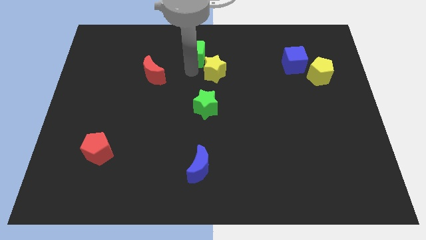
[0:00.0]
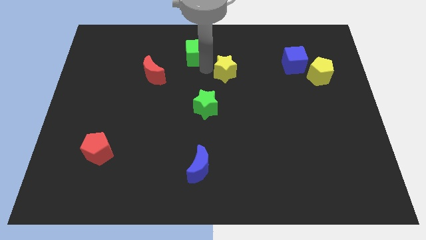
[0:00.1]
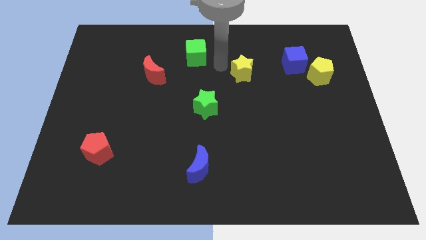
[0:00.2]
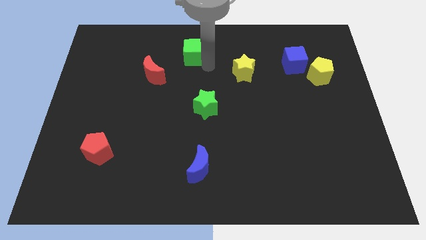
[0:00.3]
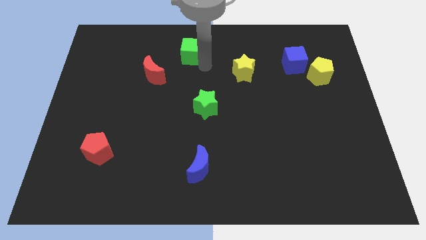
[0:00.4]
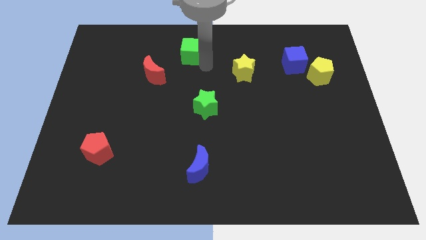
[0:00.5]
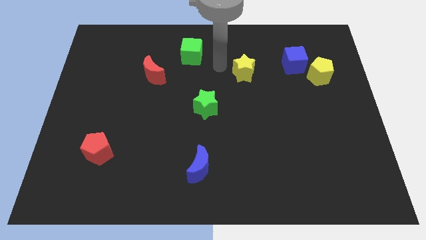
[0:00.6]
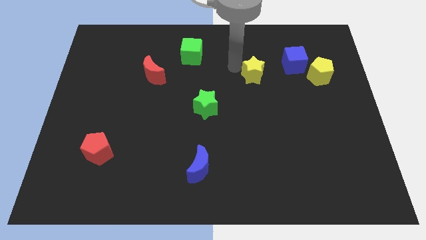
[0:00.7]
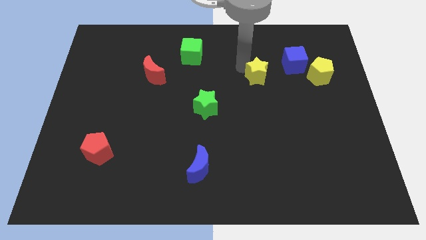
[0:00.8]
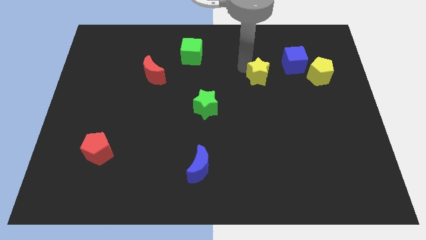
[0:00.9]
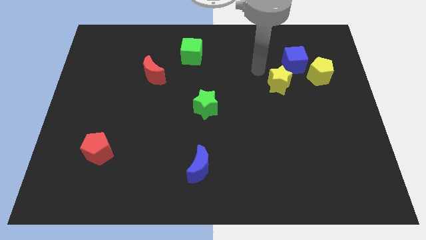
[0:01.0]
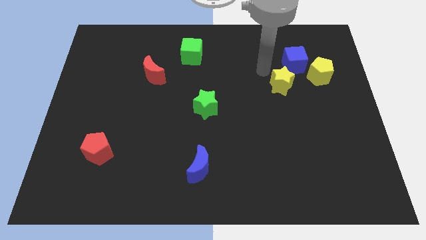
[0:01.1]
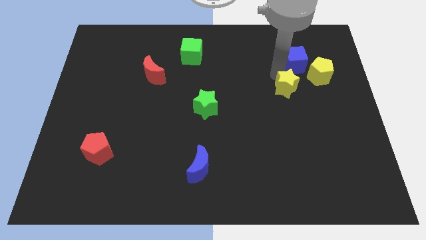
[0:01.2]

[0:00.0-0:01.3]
move yellow star towards yellow pentagon

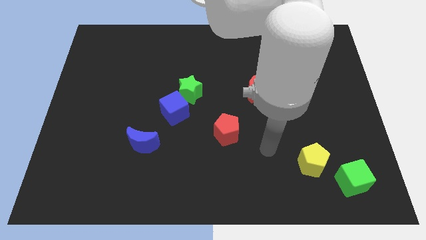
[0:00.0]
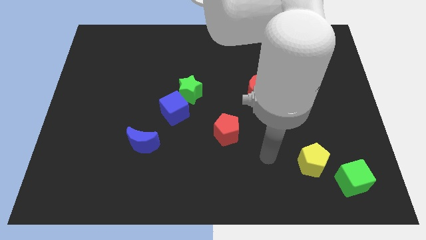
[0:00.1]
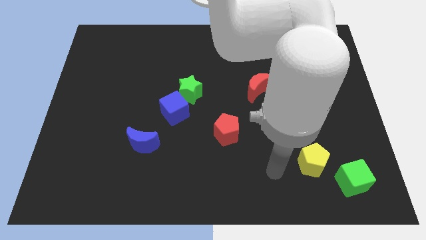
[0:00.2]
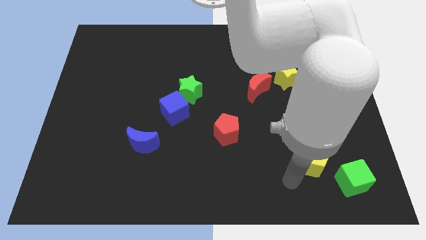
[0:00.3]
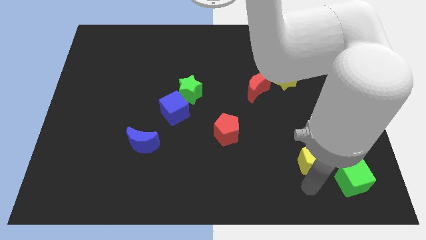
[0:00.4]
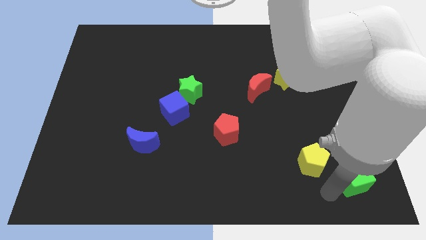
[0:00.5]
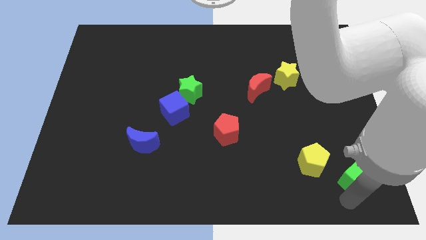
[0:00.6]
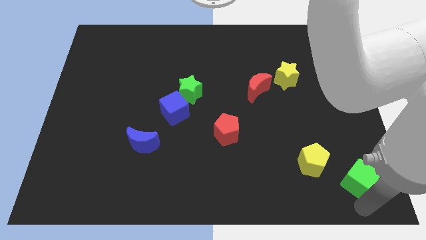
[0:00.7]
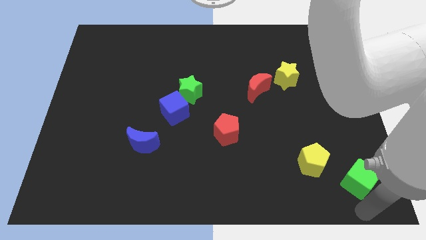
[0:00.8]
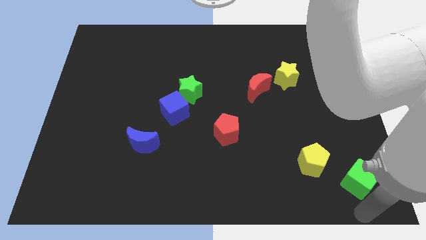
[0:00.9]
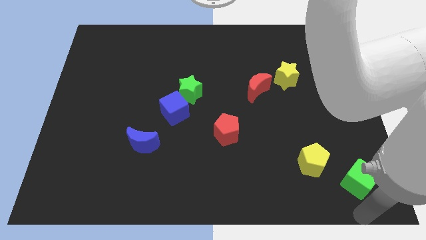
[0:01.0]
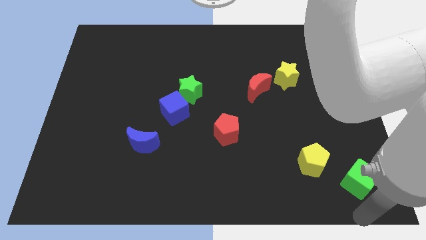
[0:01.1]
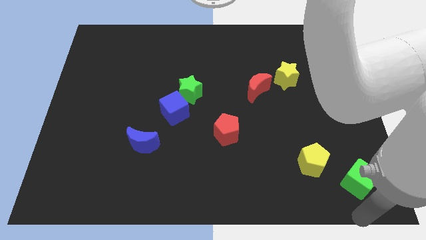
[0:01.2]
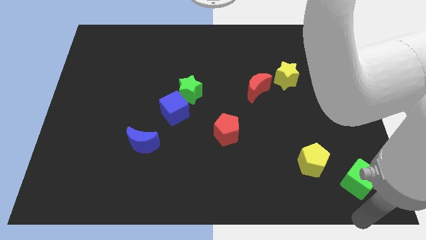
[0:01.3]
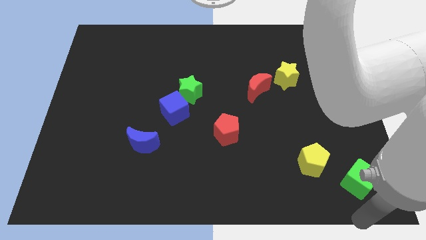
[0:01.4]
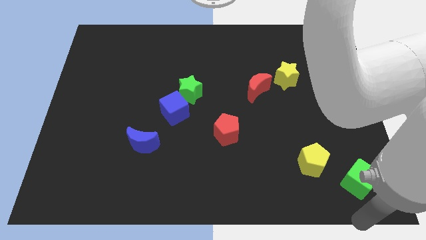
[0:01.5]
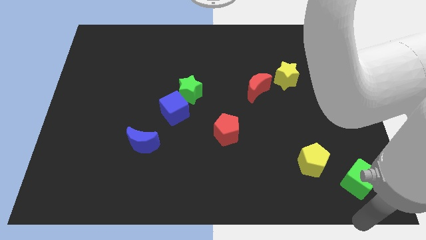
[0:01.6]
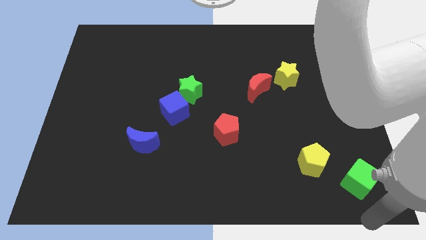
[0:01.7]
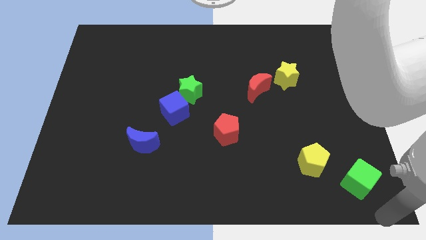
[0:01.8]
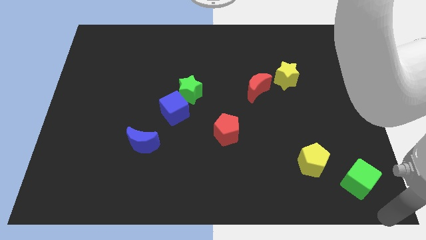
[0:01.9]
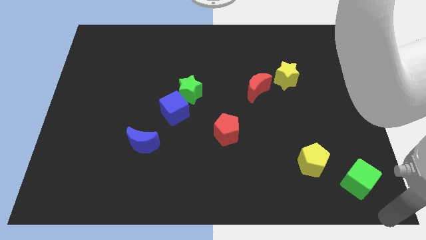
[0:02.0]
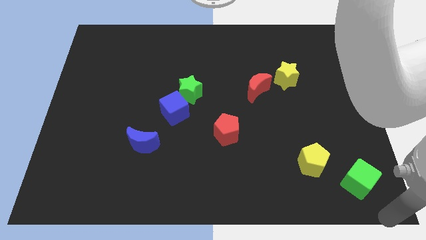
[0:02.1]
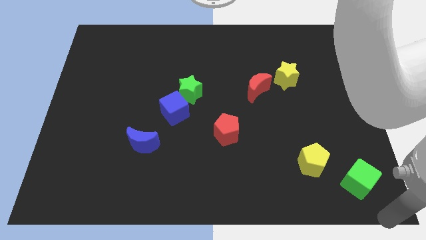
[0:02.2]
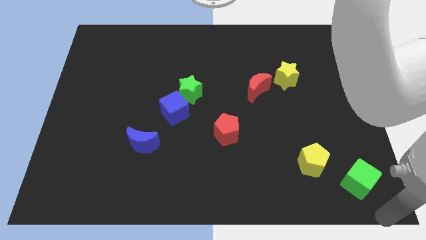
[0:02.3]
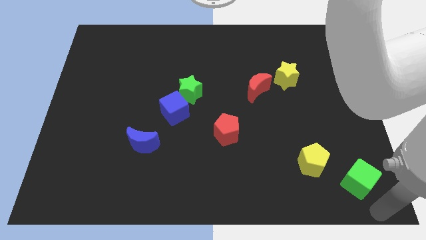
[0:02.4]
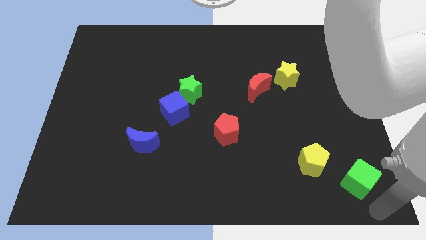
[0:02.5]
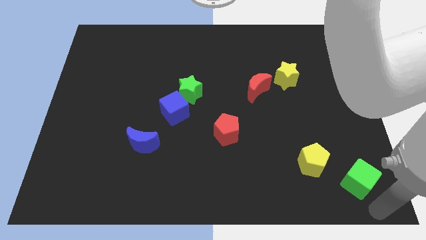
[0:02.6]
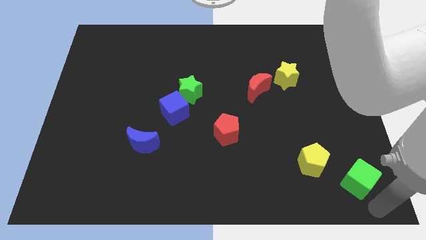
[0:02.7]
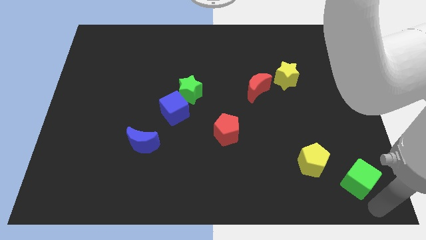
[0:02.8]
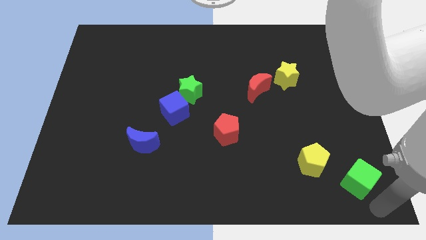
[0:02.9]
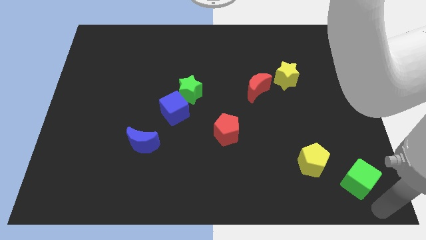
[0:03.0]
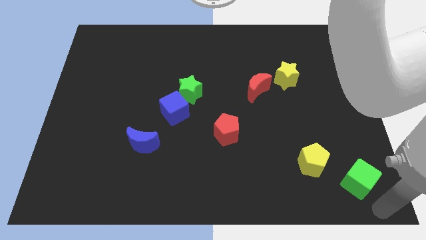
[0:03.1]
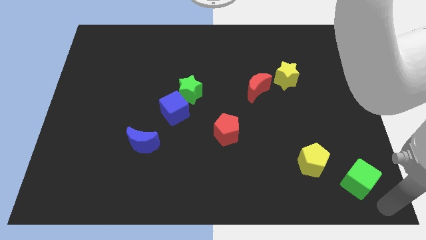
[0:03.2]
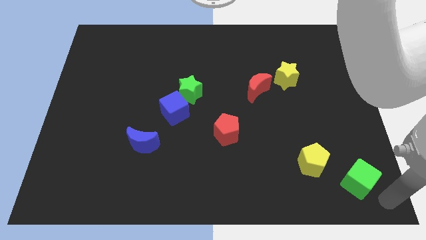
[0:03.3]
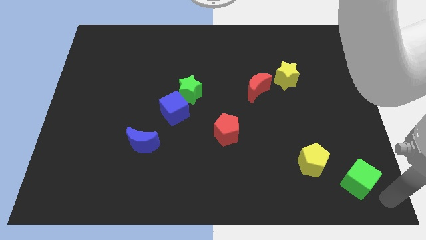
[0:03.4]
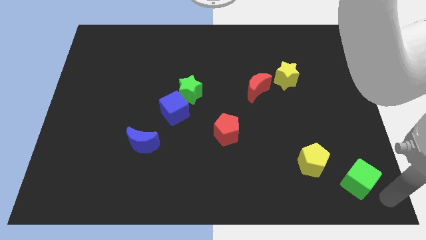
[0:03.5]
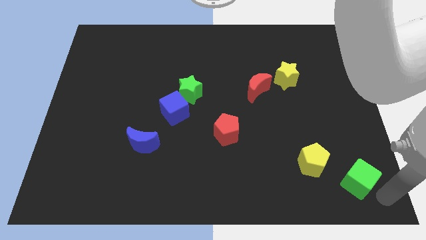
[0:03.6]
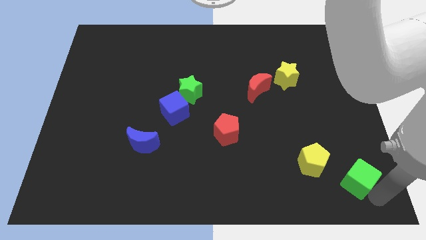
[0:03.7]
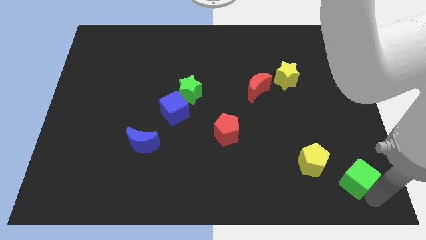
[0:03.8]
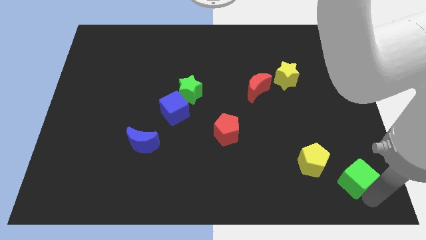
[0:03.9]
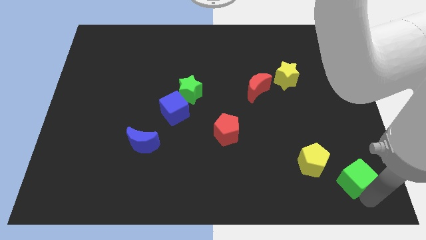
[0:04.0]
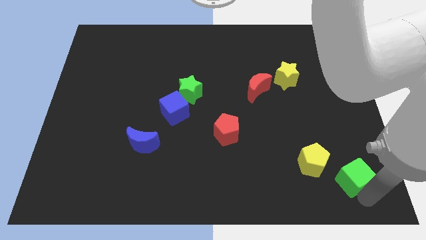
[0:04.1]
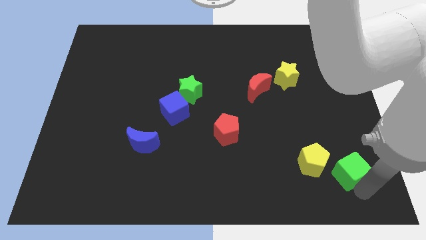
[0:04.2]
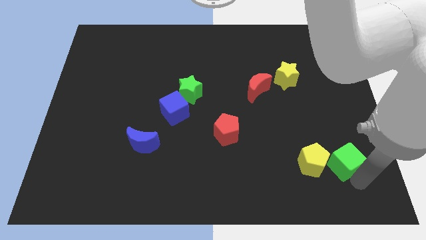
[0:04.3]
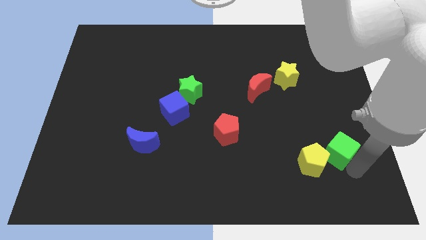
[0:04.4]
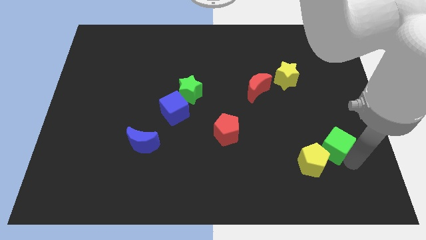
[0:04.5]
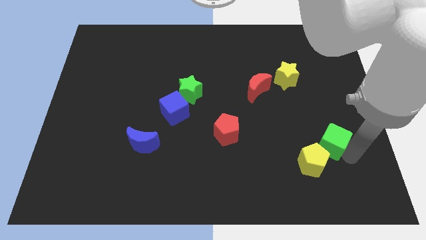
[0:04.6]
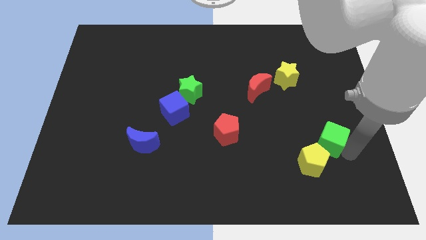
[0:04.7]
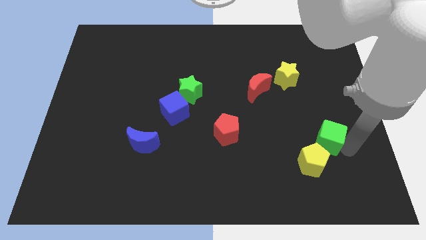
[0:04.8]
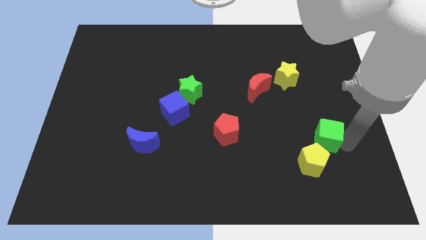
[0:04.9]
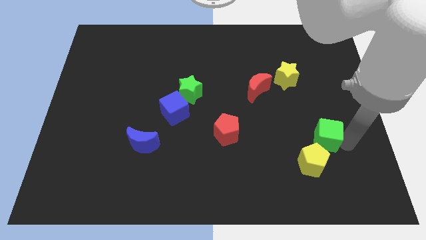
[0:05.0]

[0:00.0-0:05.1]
slide green cube to the top right of yellow pentagon

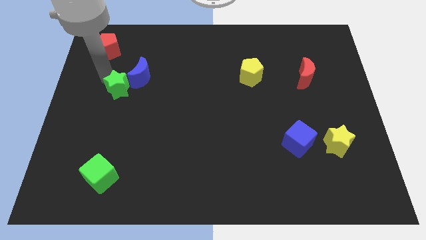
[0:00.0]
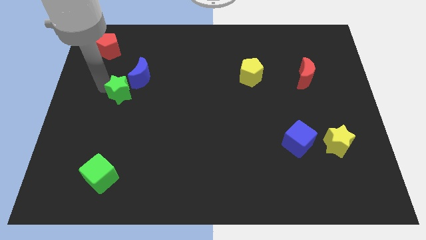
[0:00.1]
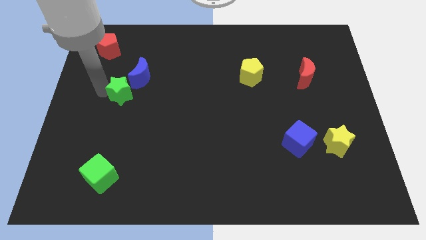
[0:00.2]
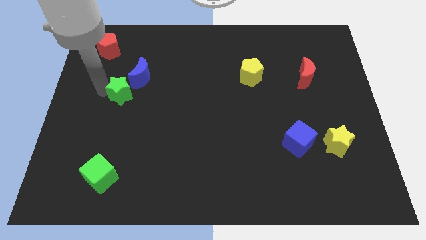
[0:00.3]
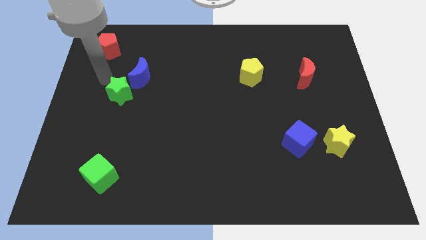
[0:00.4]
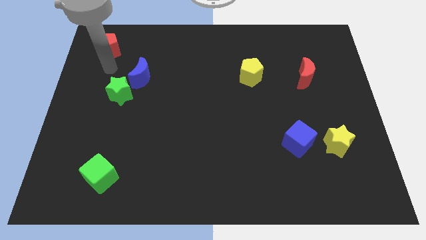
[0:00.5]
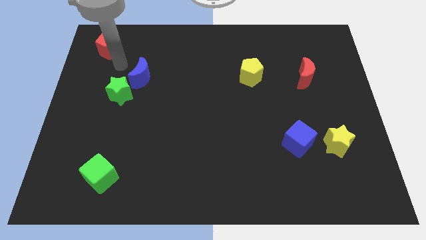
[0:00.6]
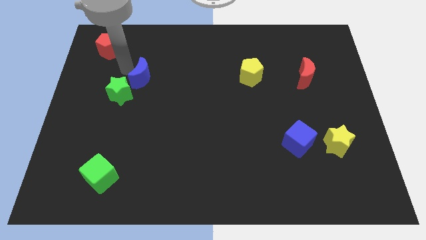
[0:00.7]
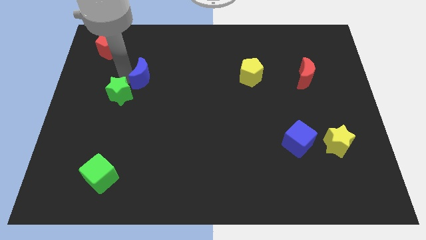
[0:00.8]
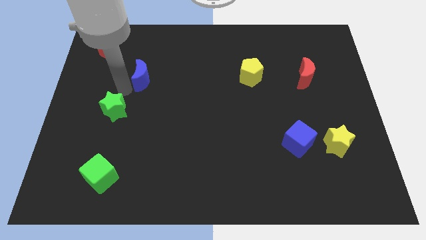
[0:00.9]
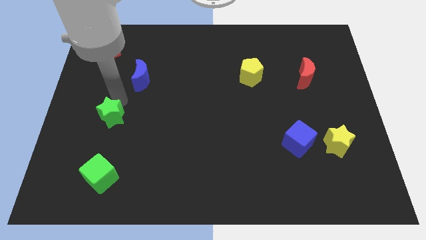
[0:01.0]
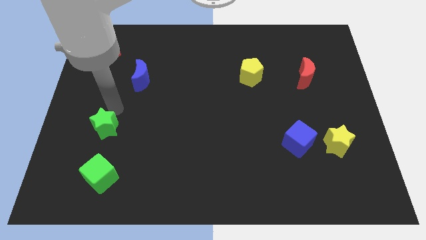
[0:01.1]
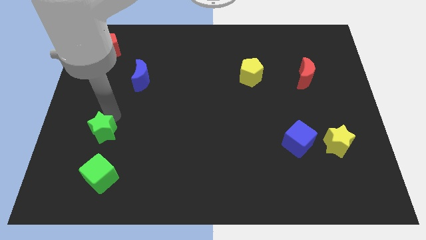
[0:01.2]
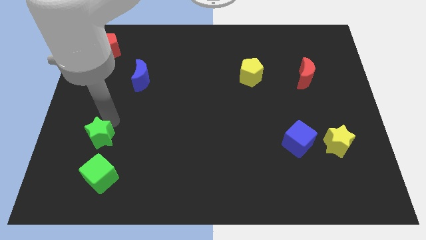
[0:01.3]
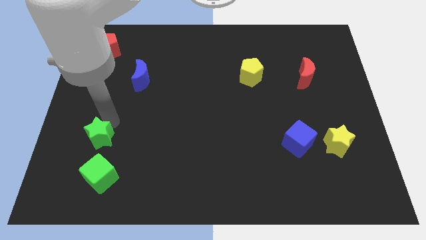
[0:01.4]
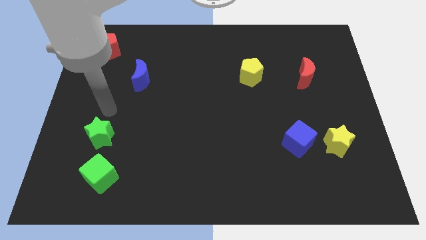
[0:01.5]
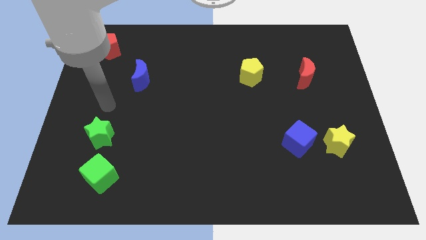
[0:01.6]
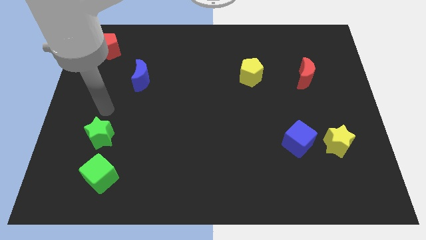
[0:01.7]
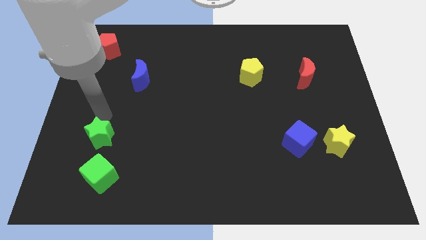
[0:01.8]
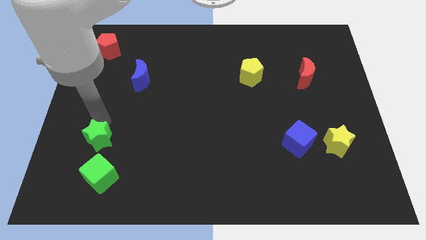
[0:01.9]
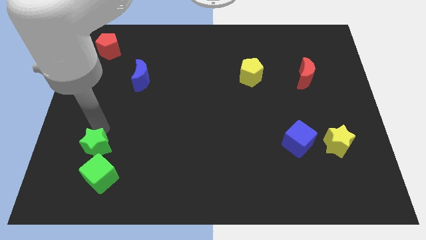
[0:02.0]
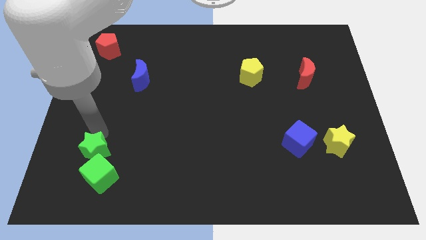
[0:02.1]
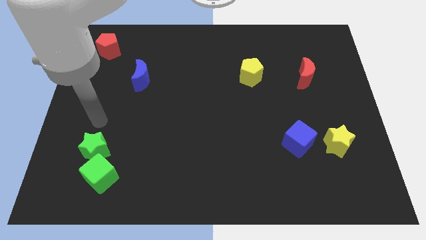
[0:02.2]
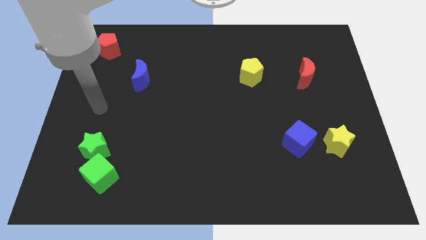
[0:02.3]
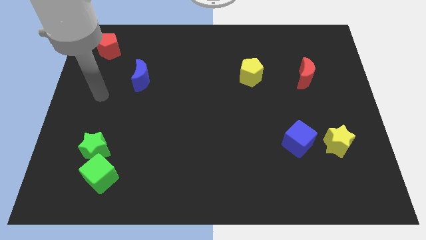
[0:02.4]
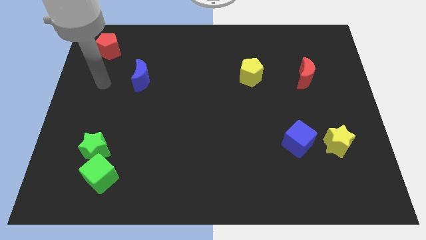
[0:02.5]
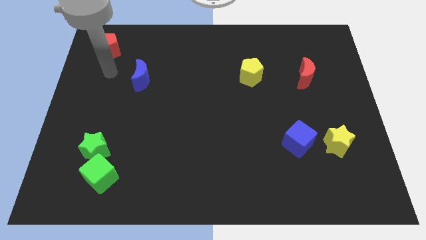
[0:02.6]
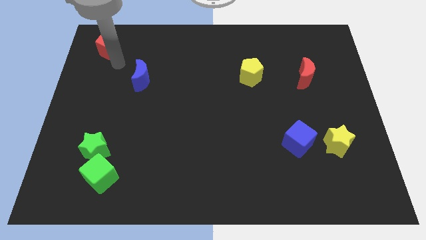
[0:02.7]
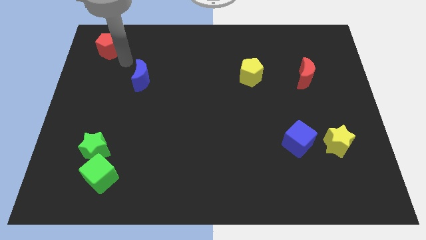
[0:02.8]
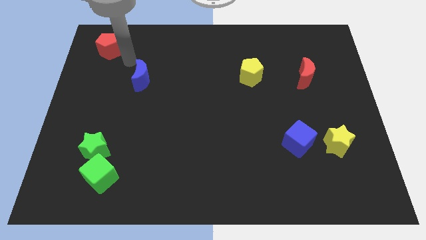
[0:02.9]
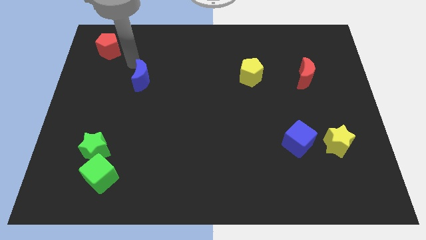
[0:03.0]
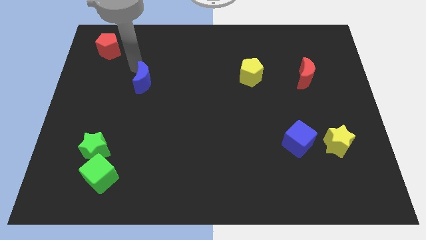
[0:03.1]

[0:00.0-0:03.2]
push the green star into the green cube
